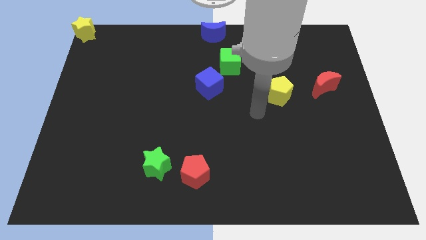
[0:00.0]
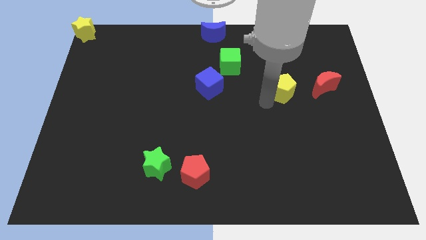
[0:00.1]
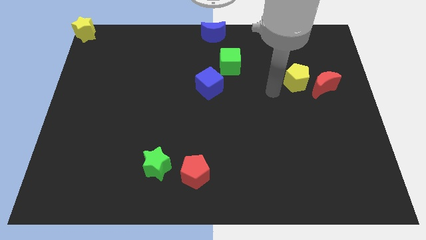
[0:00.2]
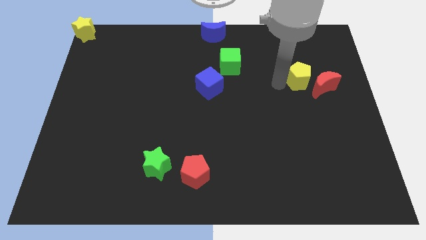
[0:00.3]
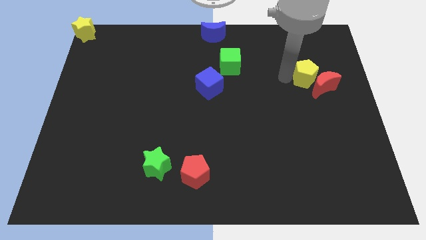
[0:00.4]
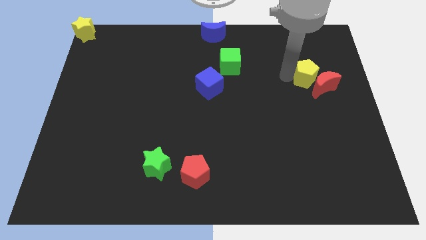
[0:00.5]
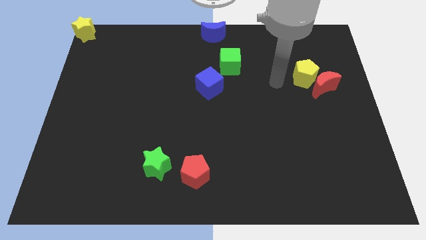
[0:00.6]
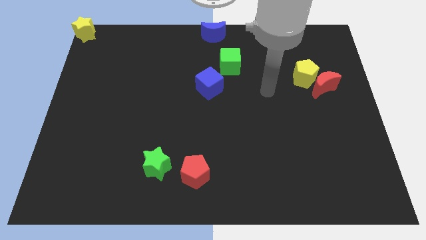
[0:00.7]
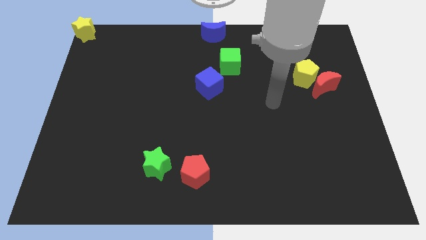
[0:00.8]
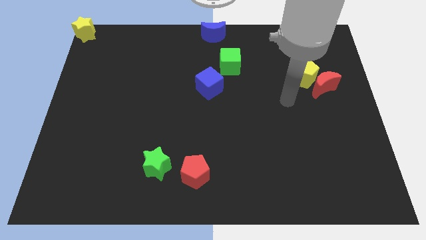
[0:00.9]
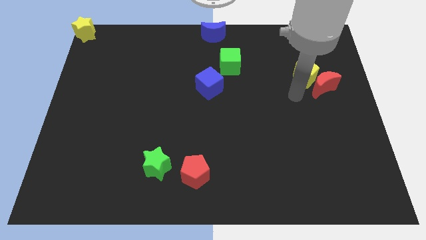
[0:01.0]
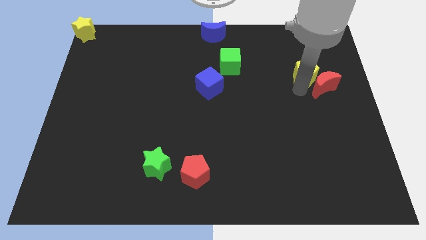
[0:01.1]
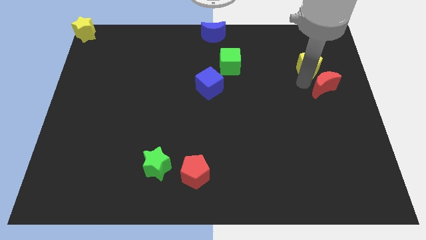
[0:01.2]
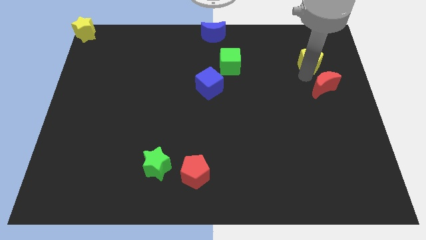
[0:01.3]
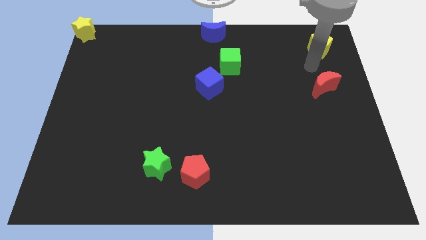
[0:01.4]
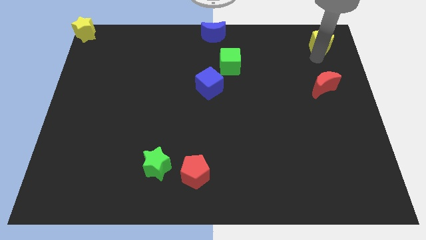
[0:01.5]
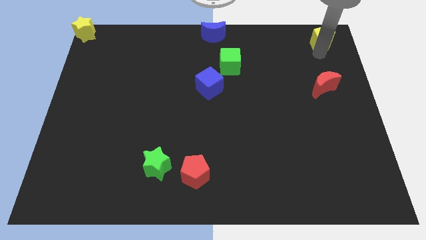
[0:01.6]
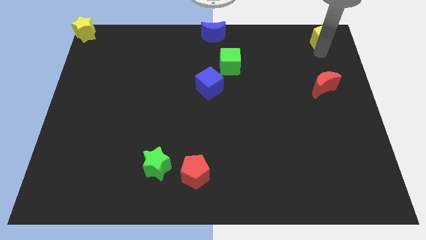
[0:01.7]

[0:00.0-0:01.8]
place the yellow pentagon above the red moon

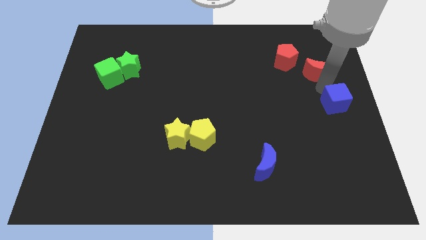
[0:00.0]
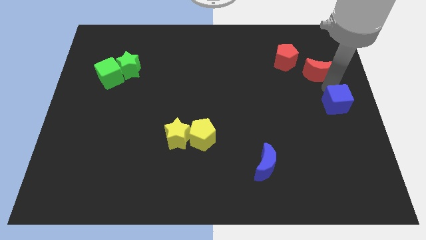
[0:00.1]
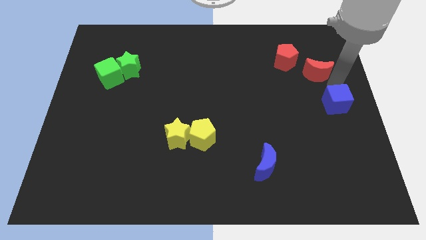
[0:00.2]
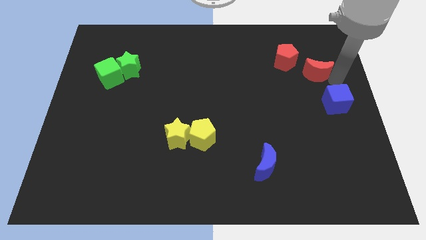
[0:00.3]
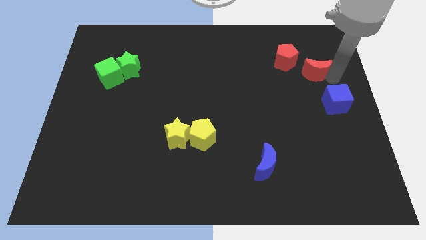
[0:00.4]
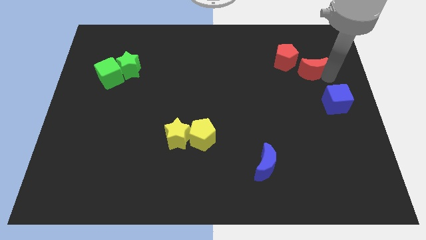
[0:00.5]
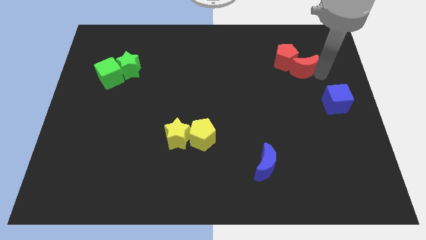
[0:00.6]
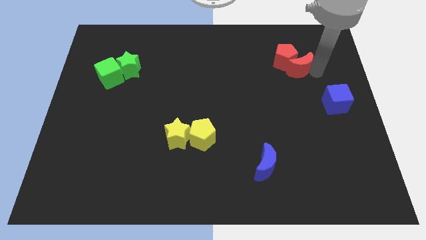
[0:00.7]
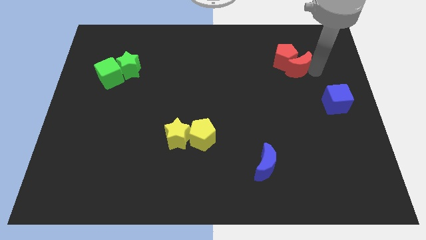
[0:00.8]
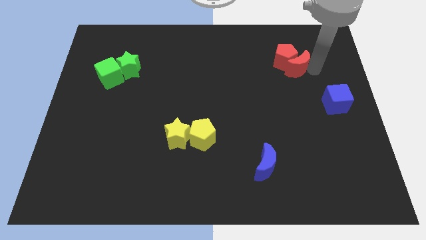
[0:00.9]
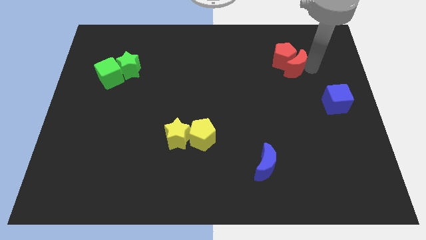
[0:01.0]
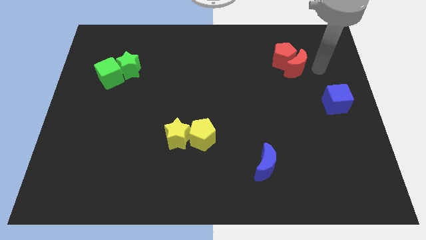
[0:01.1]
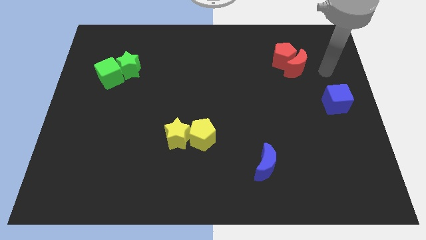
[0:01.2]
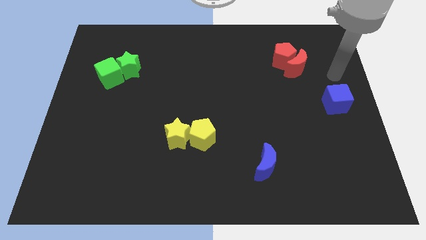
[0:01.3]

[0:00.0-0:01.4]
push the red crescent into the red pentagon

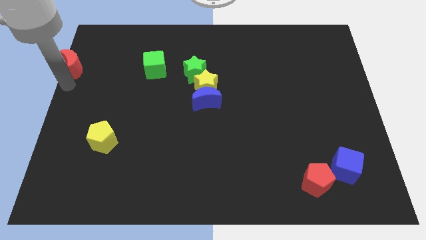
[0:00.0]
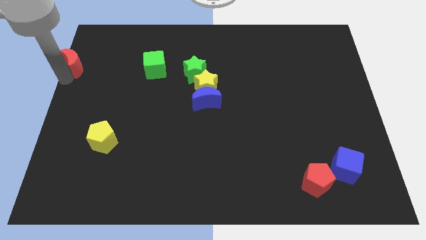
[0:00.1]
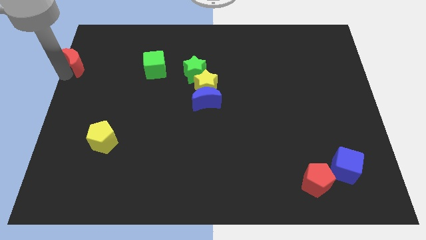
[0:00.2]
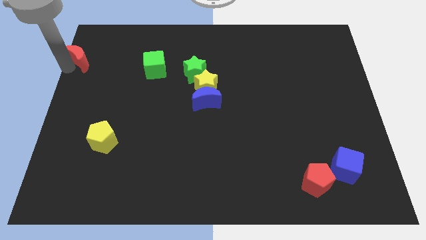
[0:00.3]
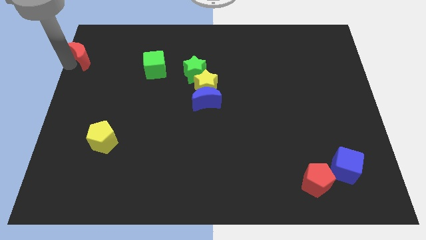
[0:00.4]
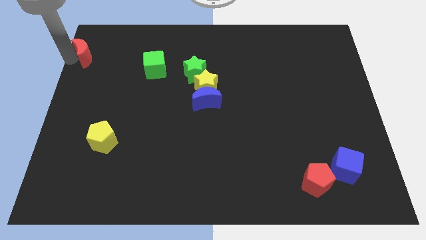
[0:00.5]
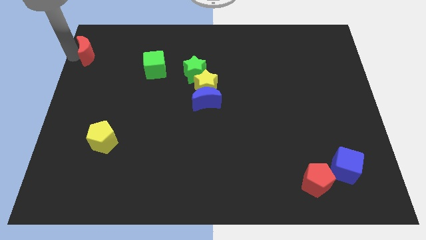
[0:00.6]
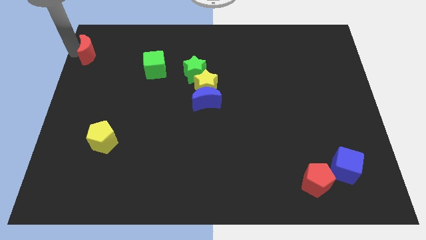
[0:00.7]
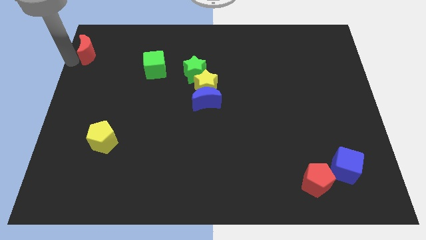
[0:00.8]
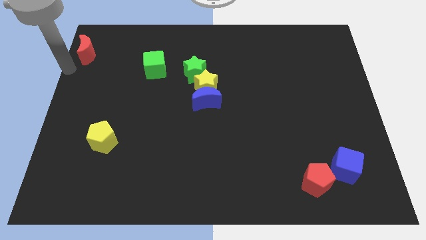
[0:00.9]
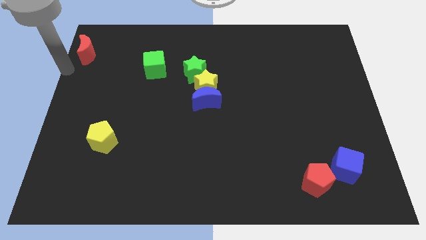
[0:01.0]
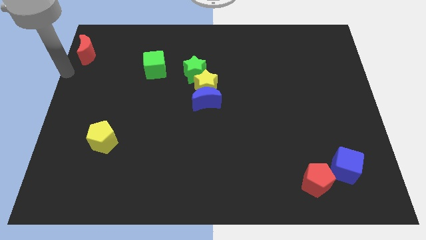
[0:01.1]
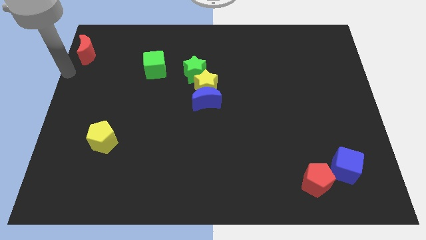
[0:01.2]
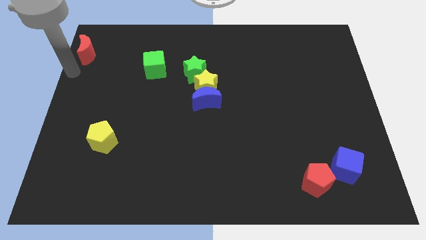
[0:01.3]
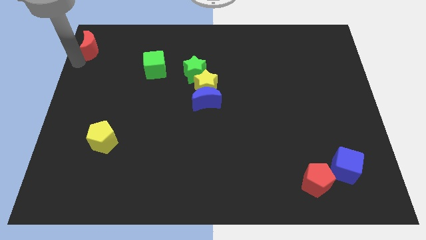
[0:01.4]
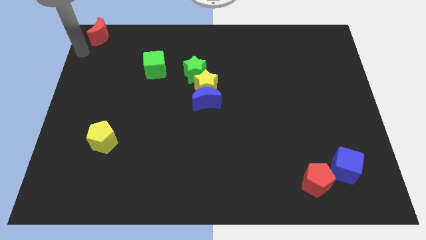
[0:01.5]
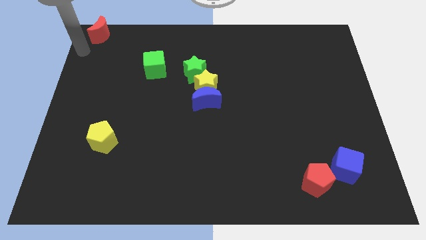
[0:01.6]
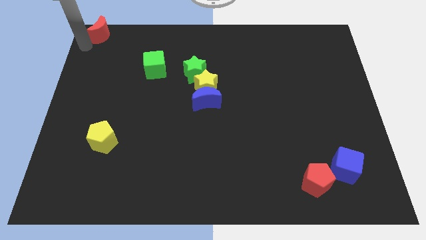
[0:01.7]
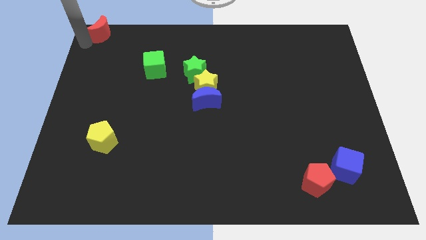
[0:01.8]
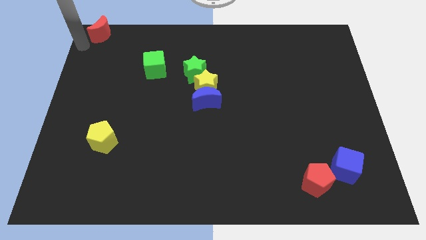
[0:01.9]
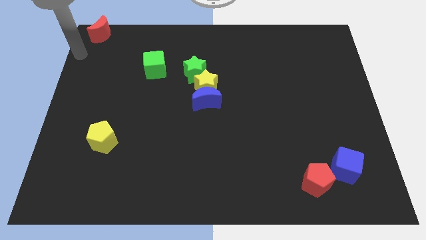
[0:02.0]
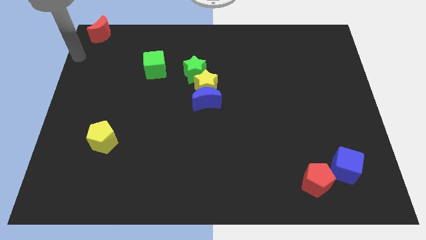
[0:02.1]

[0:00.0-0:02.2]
move the red crescent to the top left corner

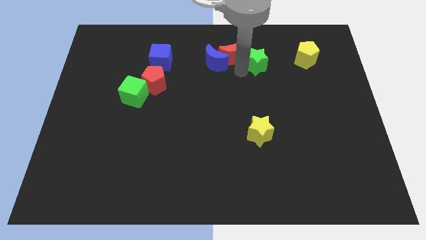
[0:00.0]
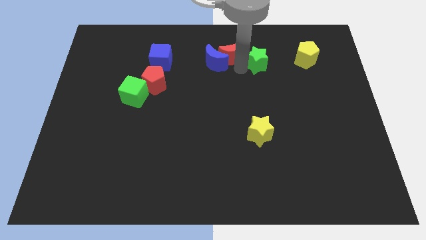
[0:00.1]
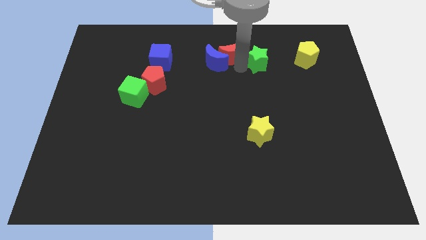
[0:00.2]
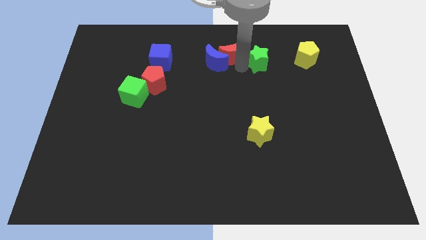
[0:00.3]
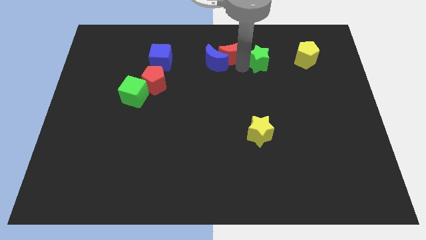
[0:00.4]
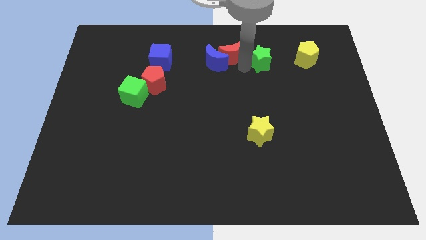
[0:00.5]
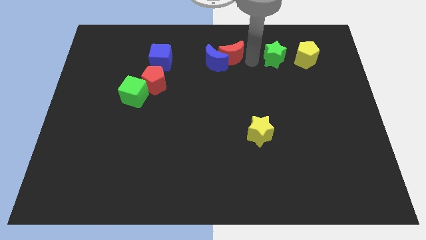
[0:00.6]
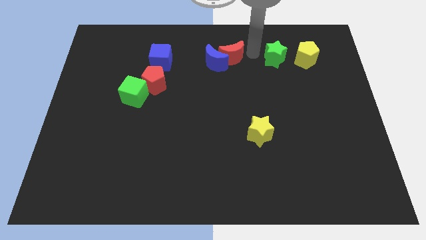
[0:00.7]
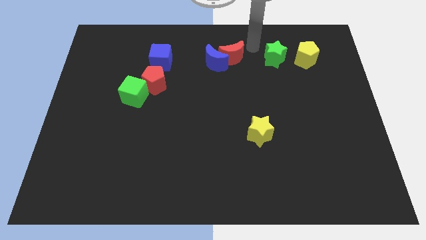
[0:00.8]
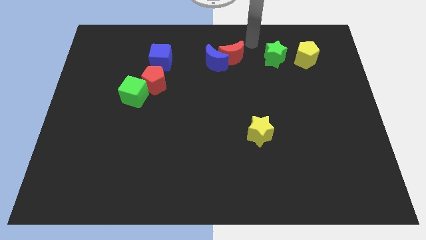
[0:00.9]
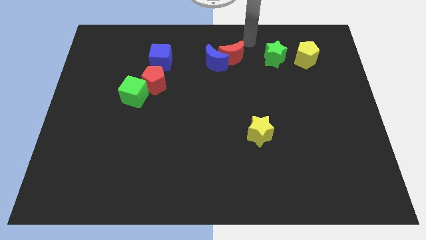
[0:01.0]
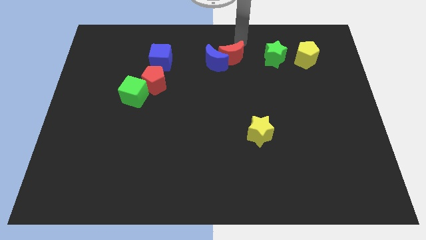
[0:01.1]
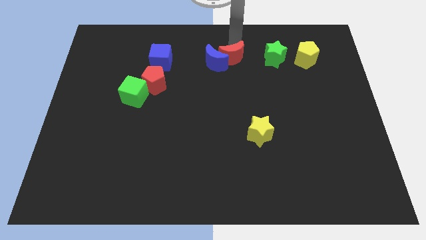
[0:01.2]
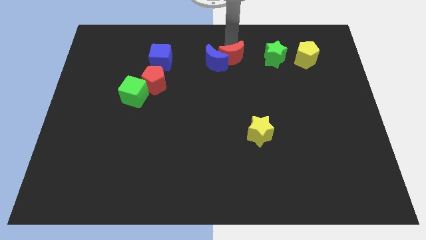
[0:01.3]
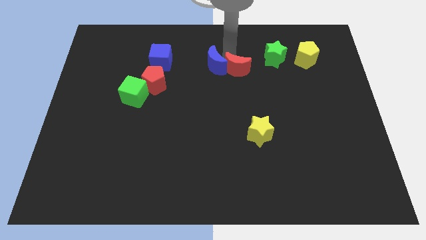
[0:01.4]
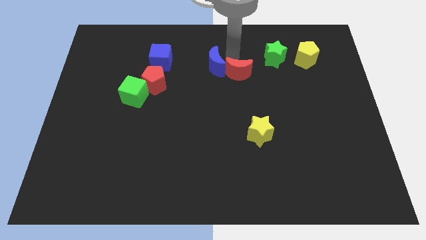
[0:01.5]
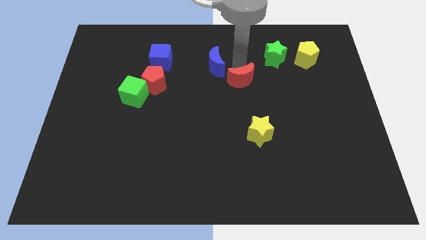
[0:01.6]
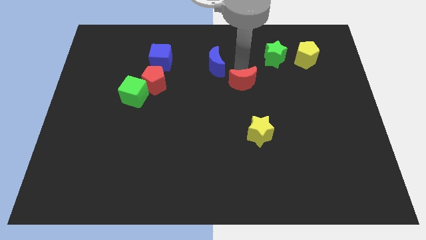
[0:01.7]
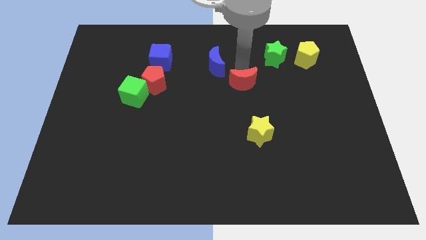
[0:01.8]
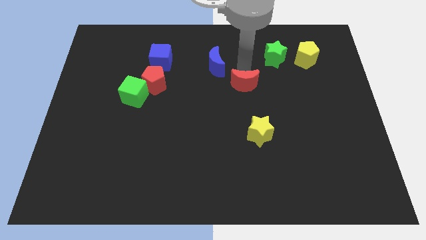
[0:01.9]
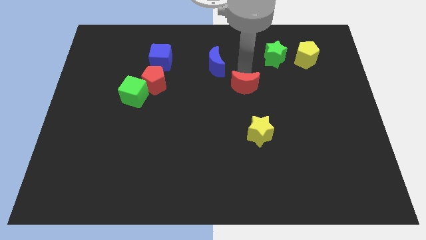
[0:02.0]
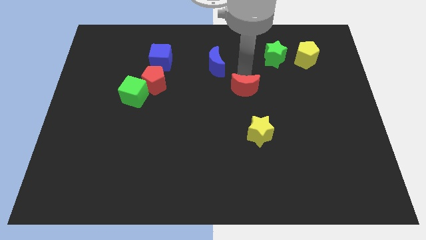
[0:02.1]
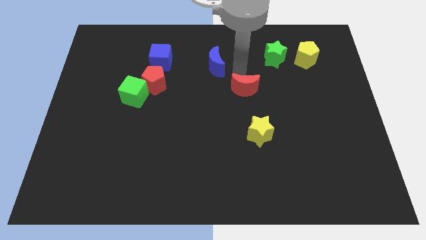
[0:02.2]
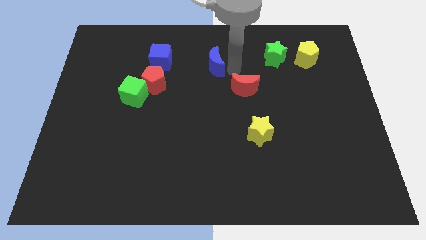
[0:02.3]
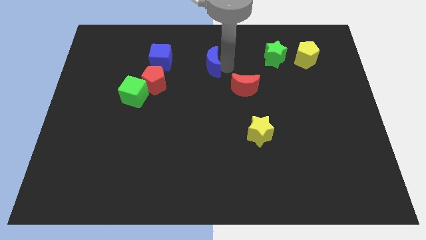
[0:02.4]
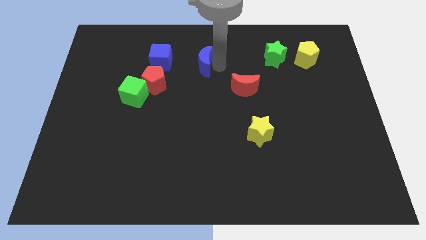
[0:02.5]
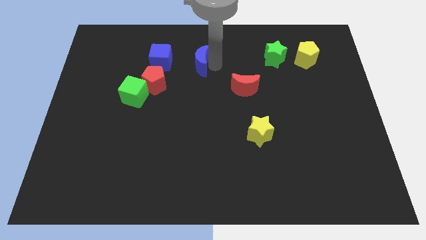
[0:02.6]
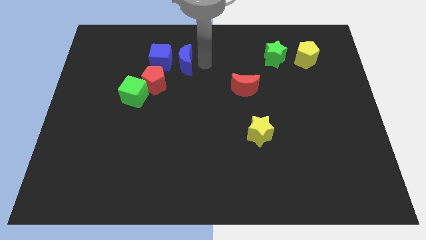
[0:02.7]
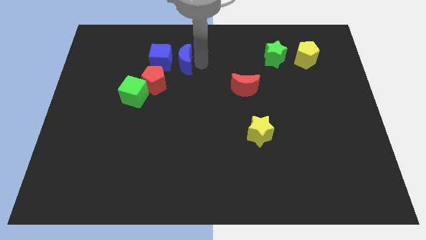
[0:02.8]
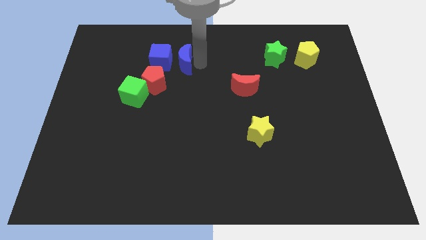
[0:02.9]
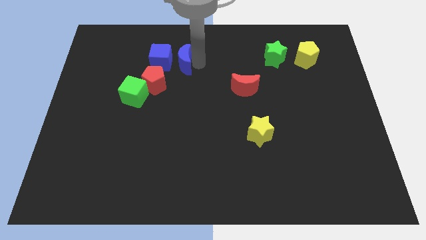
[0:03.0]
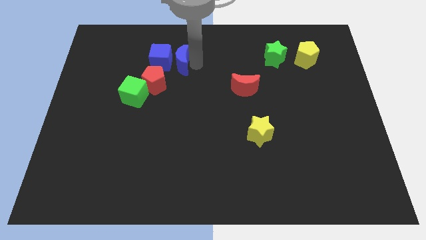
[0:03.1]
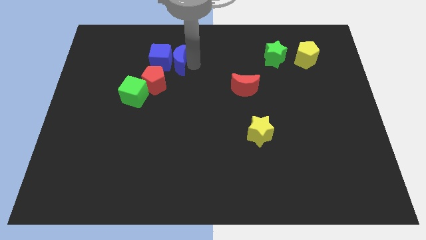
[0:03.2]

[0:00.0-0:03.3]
place the blue moon to the right of the blue cube

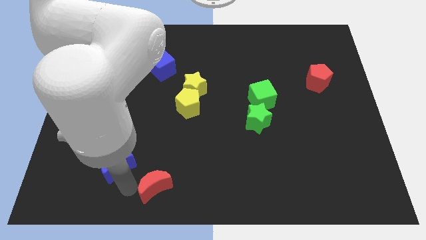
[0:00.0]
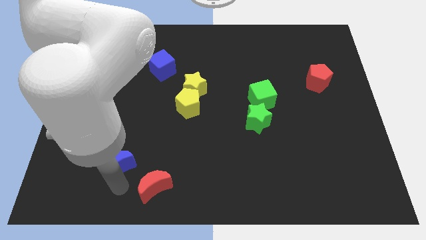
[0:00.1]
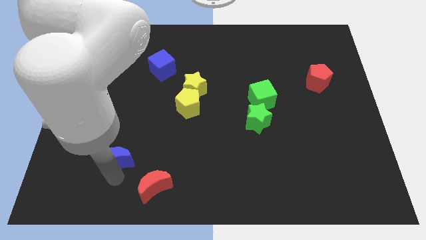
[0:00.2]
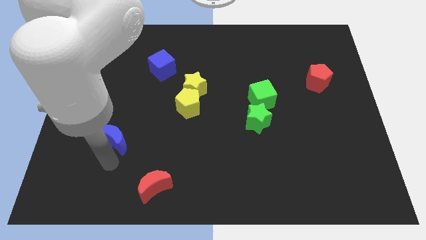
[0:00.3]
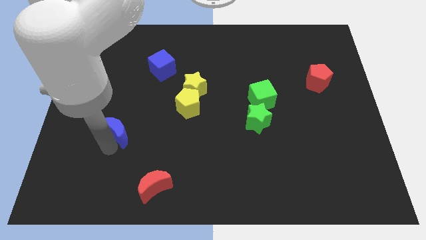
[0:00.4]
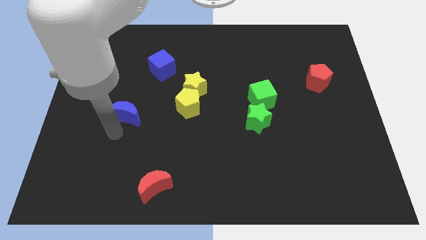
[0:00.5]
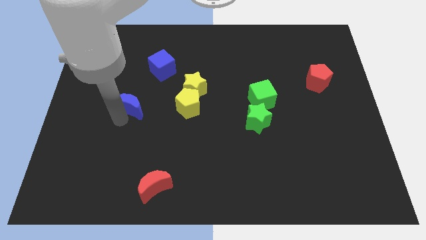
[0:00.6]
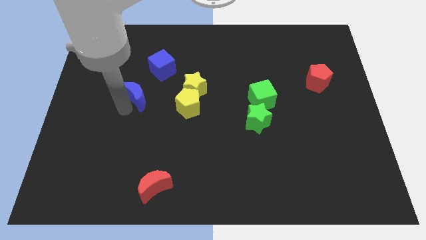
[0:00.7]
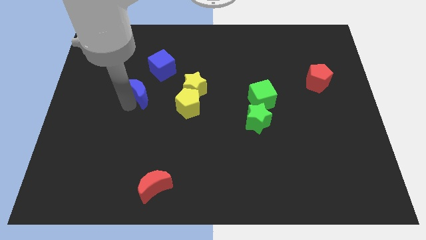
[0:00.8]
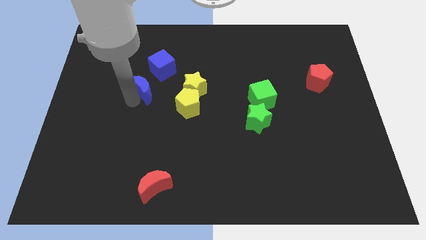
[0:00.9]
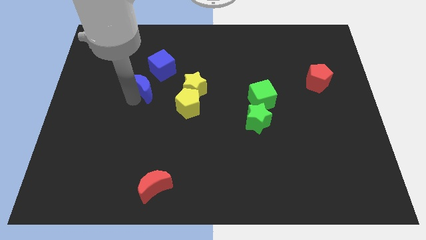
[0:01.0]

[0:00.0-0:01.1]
push the blue moon upward
